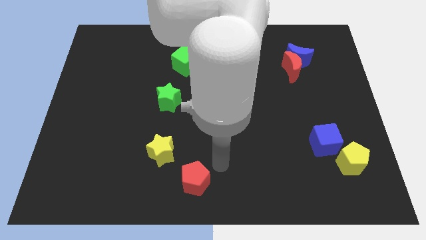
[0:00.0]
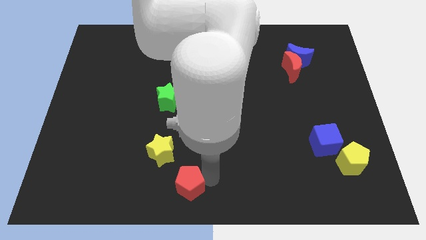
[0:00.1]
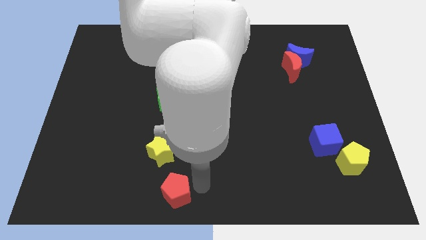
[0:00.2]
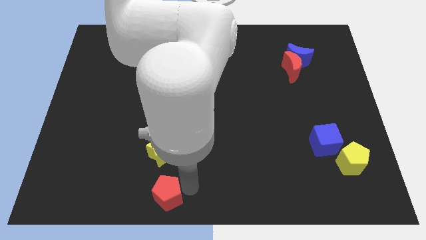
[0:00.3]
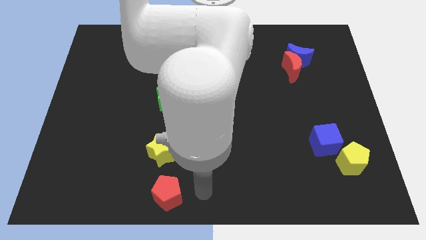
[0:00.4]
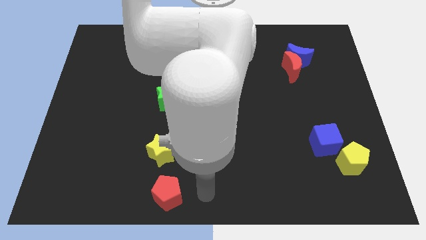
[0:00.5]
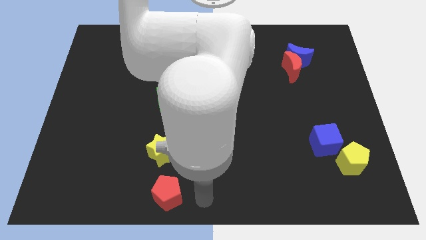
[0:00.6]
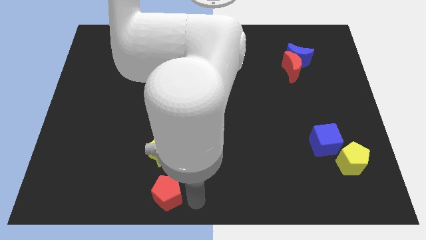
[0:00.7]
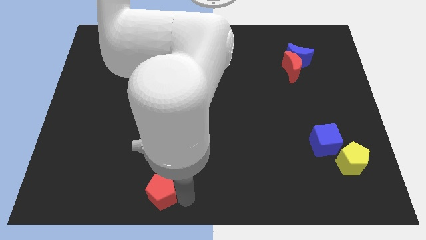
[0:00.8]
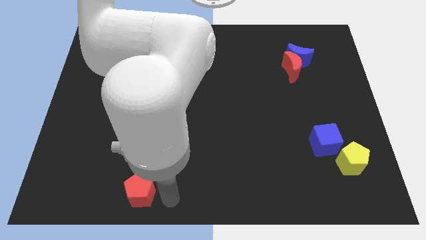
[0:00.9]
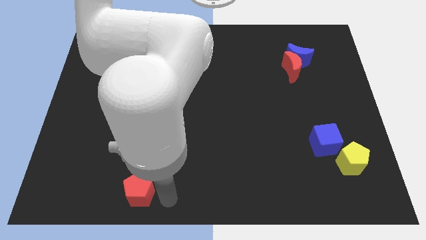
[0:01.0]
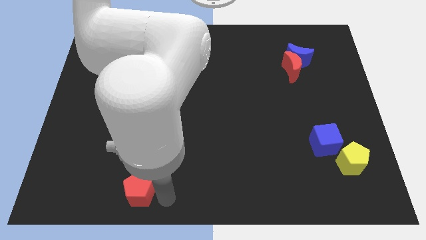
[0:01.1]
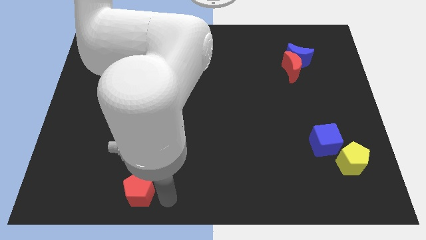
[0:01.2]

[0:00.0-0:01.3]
push red pentagon towards its left

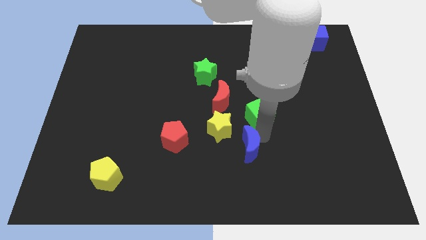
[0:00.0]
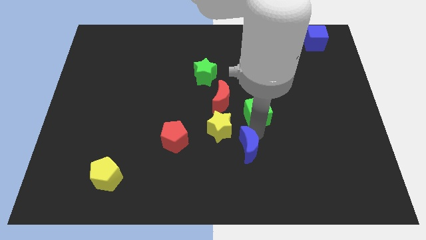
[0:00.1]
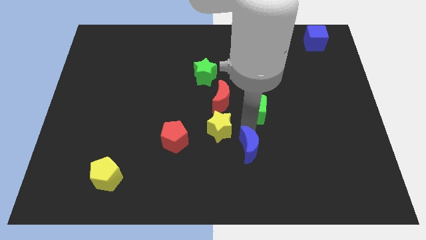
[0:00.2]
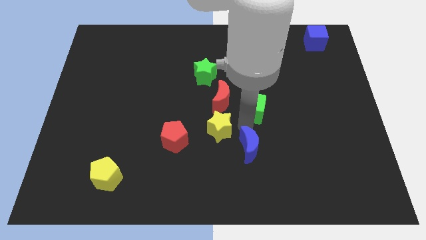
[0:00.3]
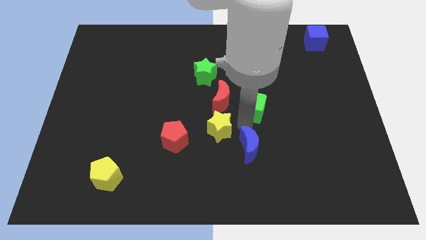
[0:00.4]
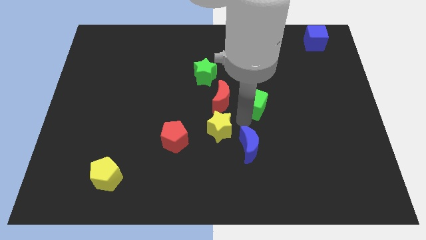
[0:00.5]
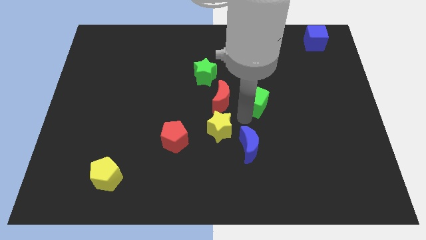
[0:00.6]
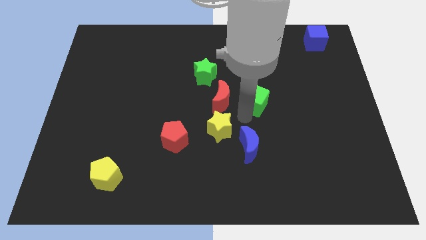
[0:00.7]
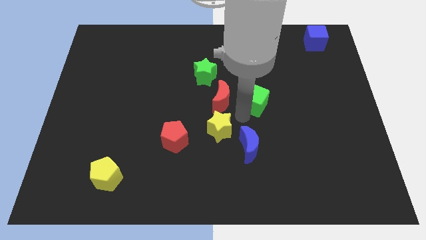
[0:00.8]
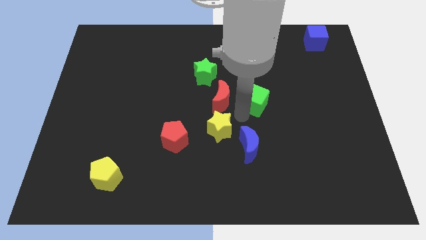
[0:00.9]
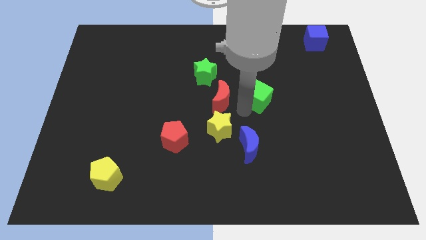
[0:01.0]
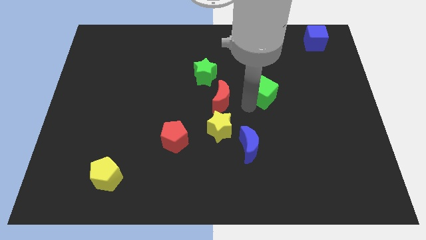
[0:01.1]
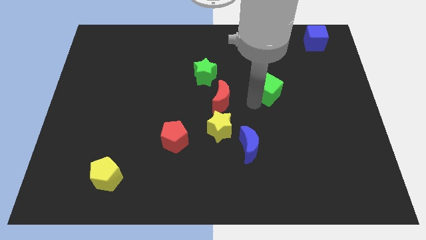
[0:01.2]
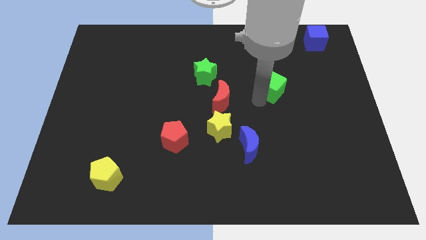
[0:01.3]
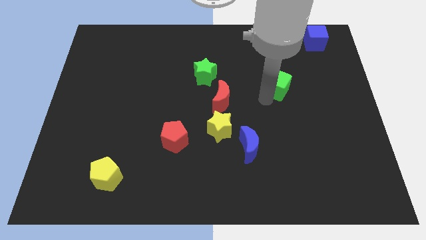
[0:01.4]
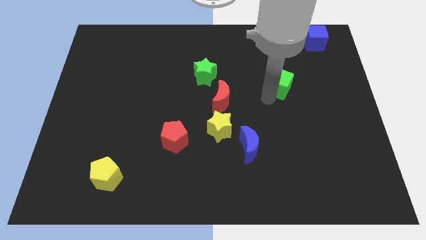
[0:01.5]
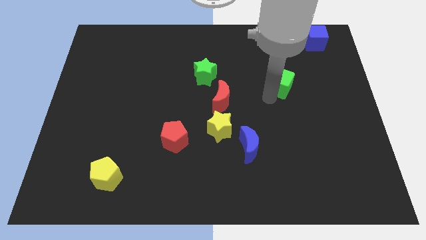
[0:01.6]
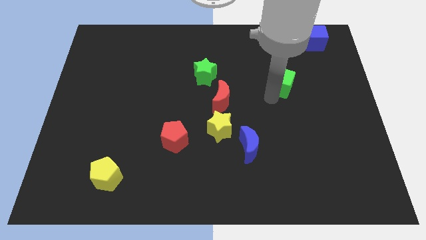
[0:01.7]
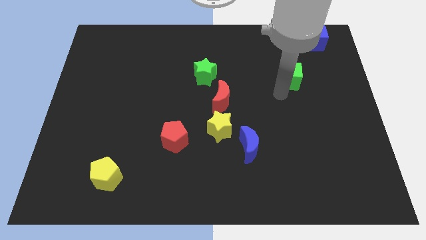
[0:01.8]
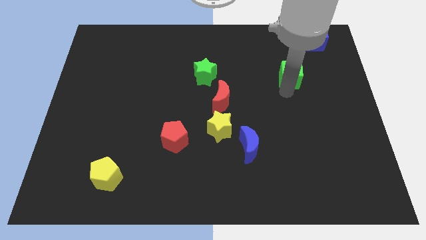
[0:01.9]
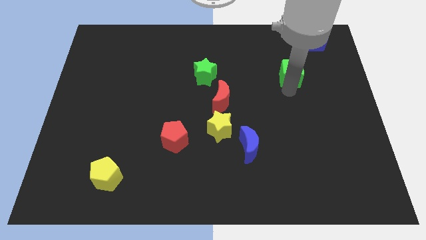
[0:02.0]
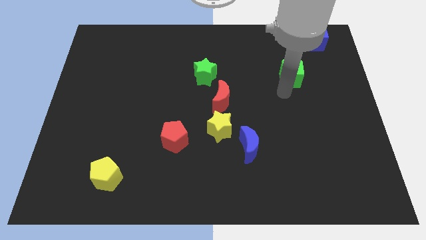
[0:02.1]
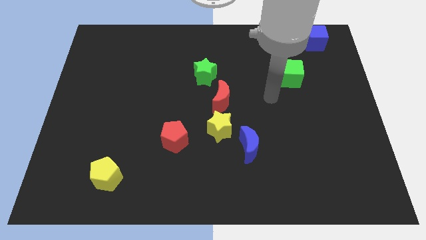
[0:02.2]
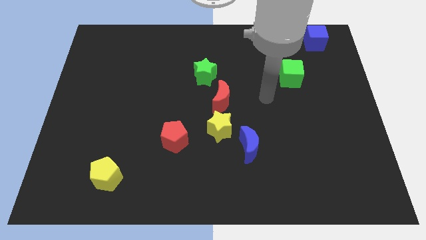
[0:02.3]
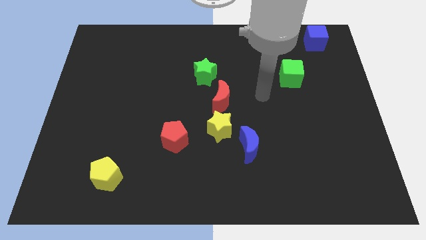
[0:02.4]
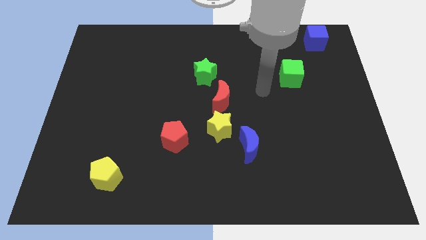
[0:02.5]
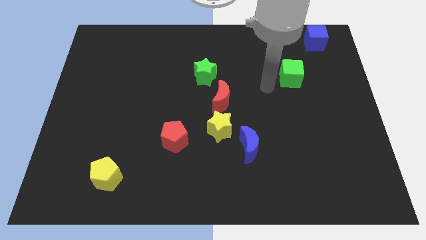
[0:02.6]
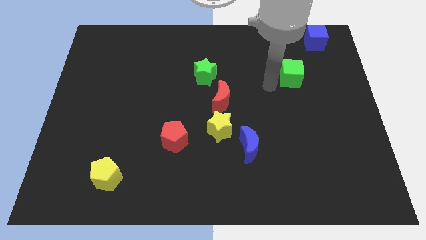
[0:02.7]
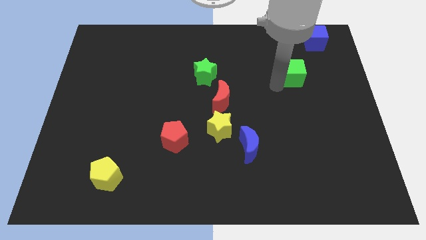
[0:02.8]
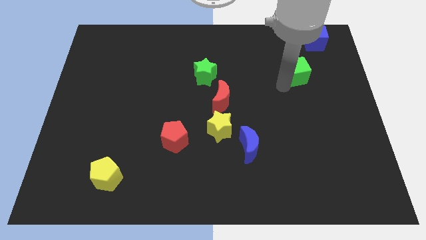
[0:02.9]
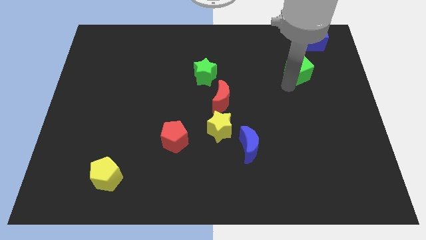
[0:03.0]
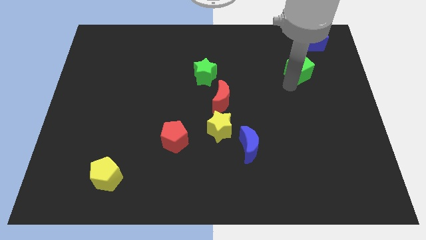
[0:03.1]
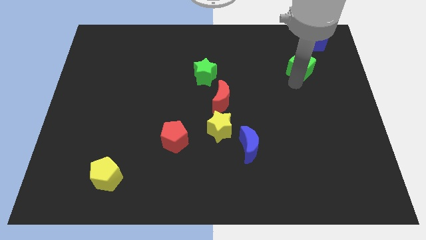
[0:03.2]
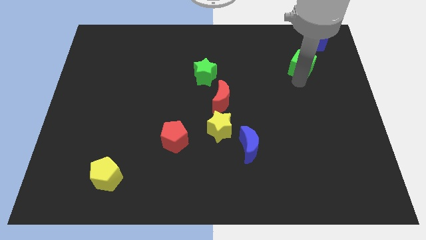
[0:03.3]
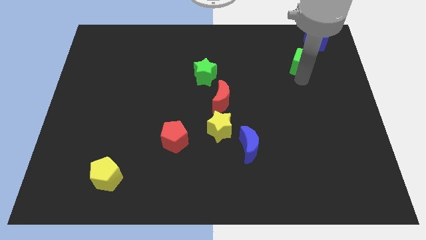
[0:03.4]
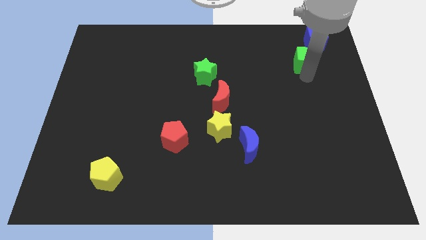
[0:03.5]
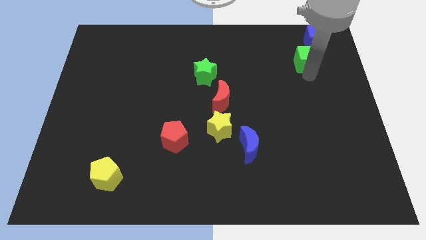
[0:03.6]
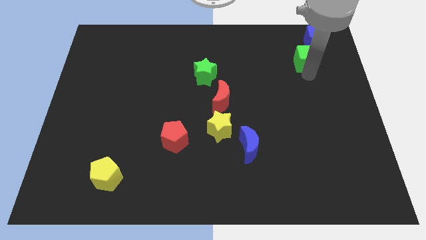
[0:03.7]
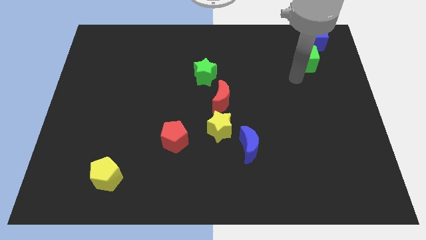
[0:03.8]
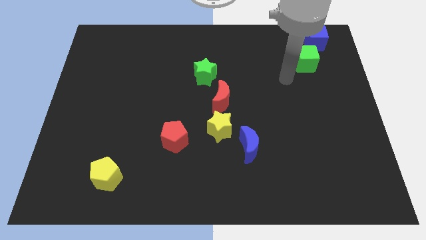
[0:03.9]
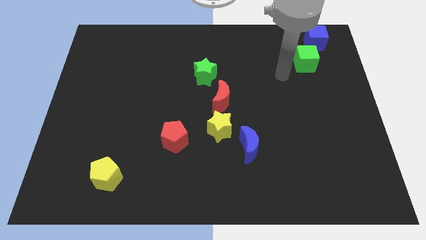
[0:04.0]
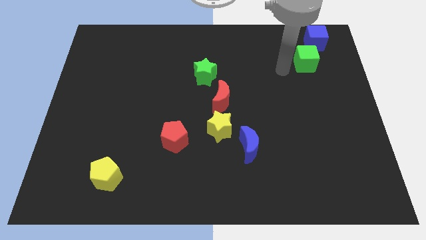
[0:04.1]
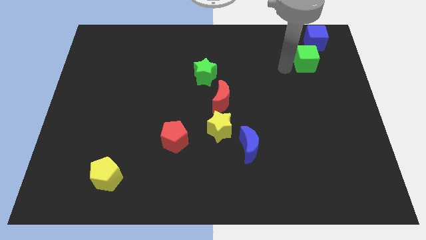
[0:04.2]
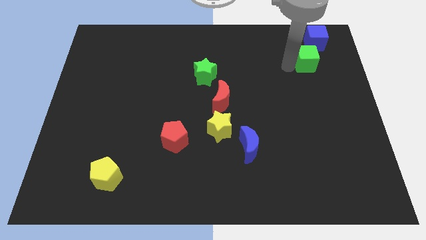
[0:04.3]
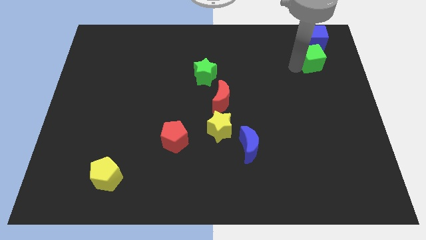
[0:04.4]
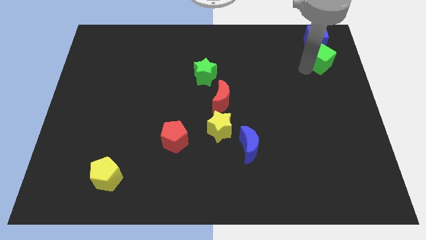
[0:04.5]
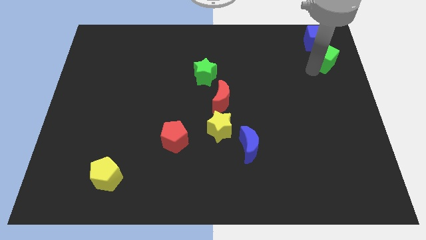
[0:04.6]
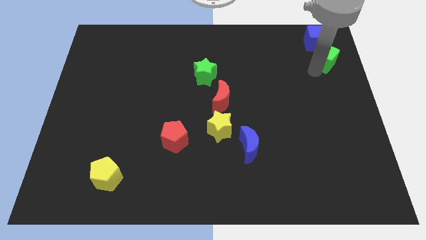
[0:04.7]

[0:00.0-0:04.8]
place the green cube below the blue cube

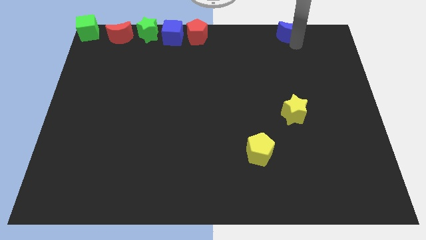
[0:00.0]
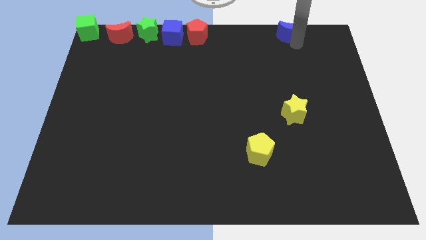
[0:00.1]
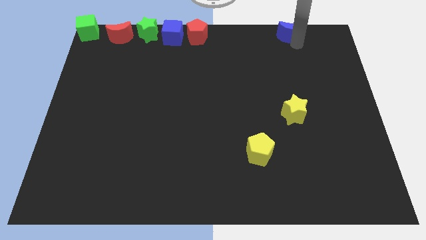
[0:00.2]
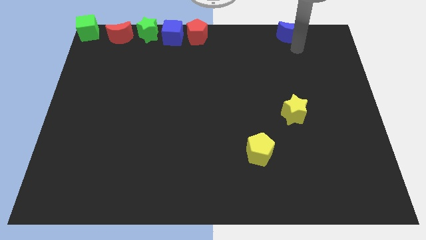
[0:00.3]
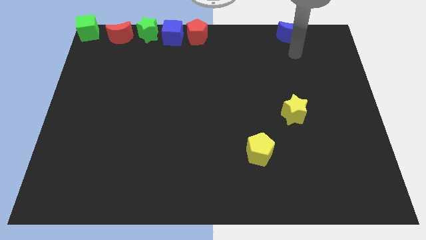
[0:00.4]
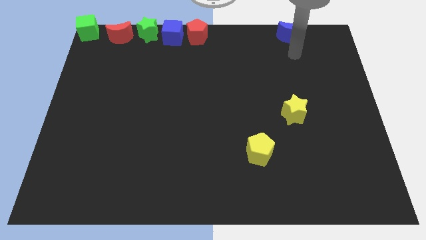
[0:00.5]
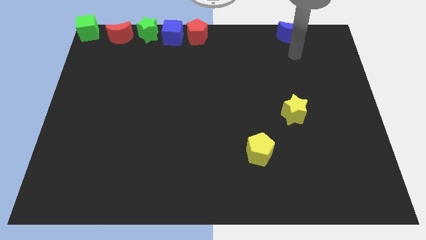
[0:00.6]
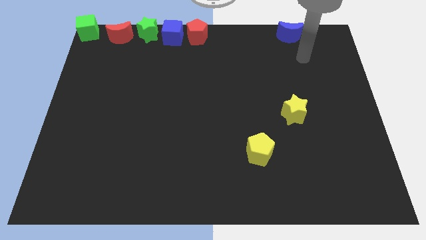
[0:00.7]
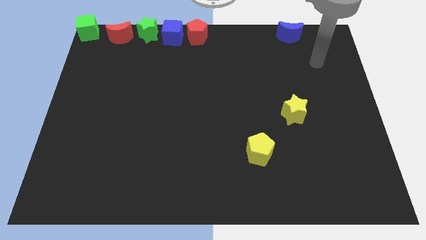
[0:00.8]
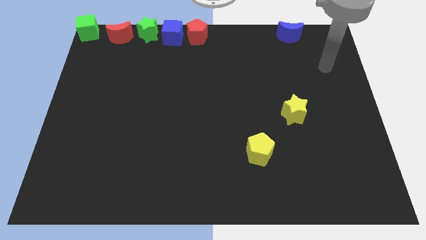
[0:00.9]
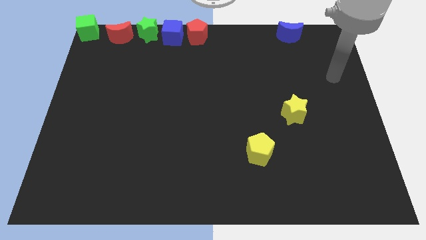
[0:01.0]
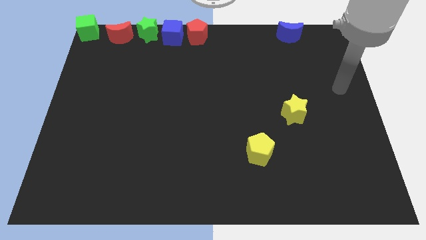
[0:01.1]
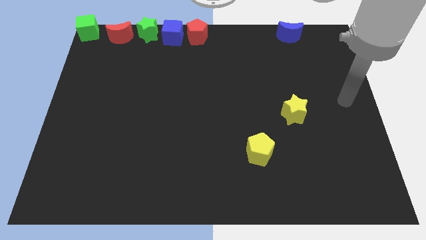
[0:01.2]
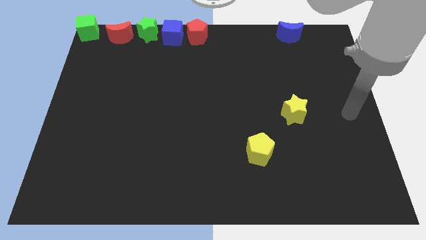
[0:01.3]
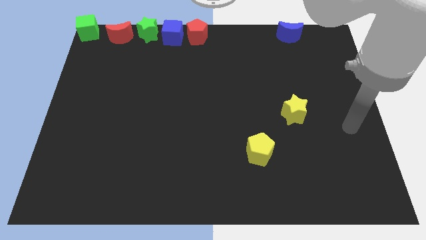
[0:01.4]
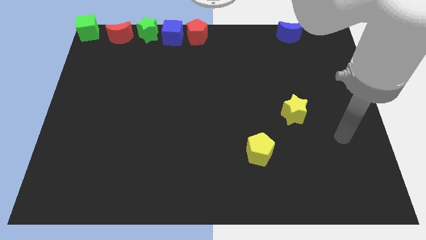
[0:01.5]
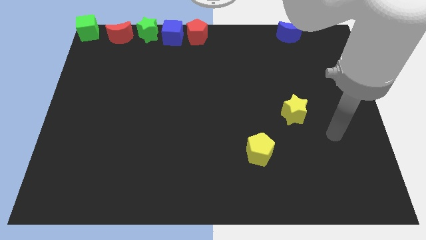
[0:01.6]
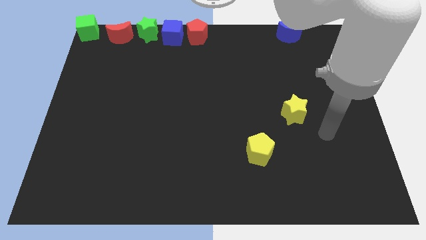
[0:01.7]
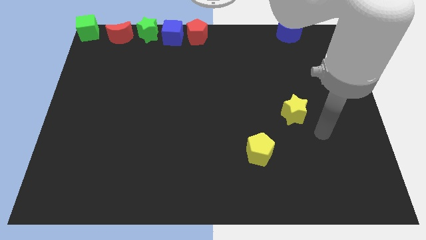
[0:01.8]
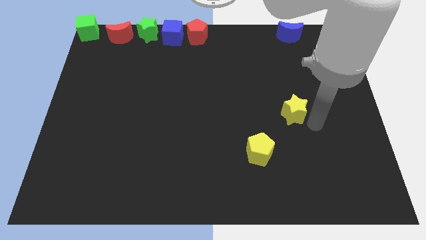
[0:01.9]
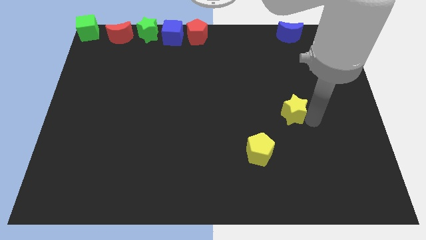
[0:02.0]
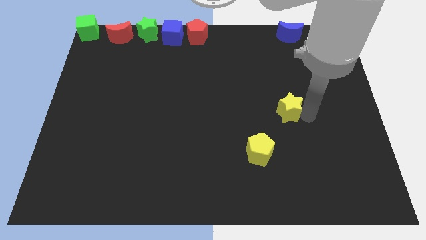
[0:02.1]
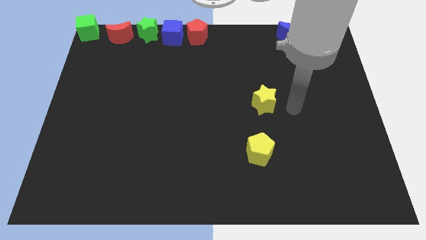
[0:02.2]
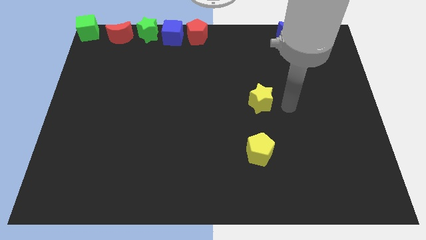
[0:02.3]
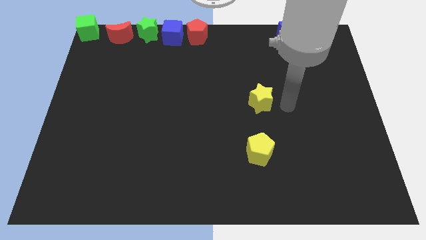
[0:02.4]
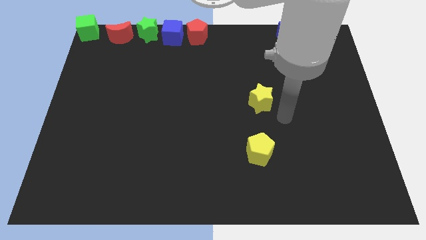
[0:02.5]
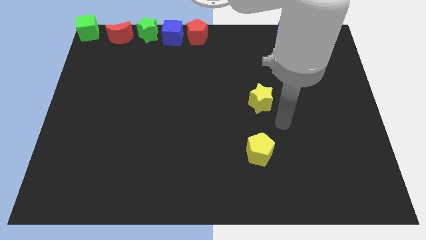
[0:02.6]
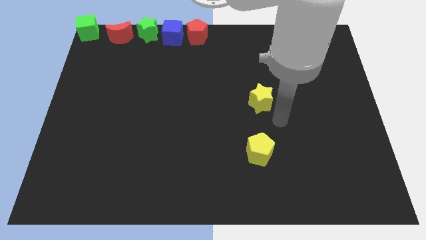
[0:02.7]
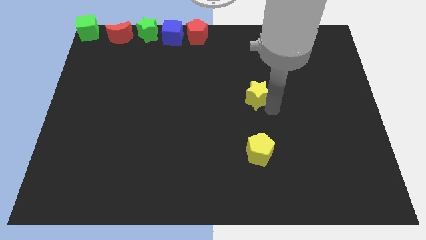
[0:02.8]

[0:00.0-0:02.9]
place the yellow star vertically above the yellow pentagon

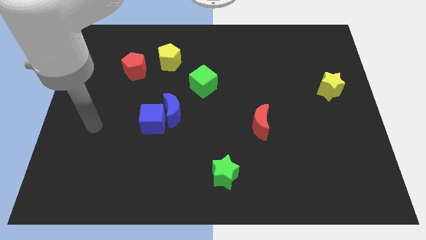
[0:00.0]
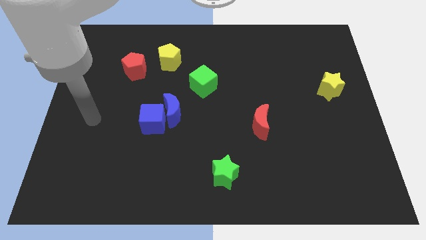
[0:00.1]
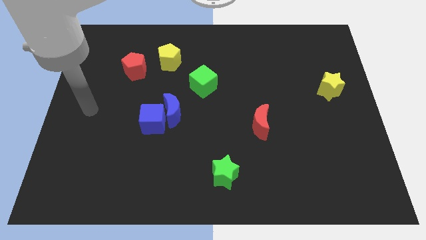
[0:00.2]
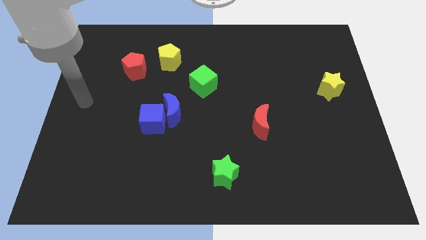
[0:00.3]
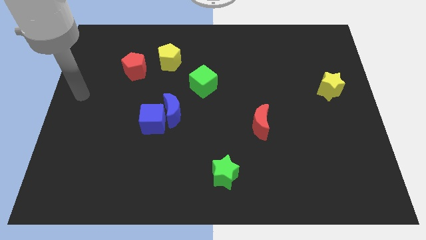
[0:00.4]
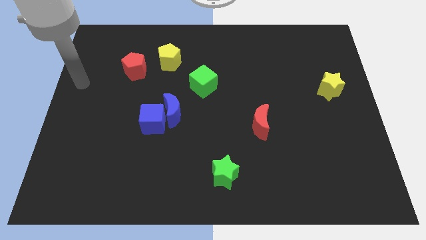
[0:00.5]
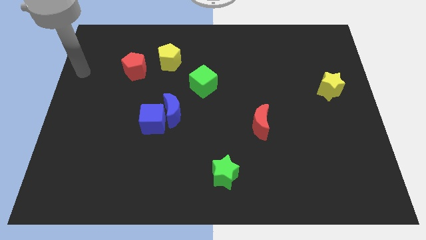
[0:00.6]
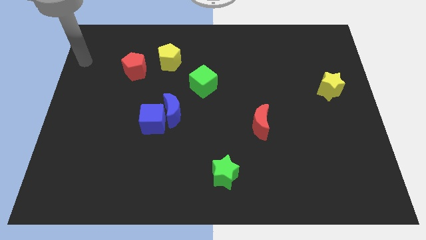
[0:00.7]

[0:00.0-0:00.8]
point your arm near to the top left corner
